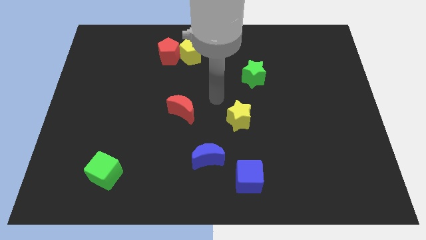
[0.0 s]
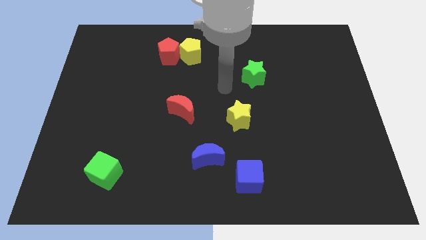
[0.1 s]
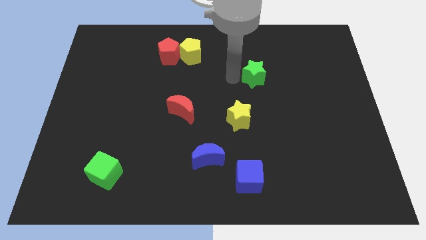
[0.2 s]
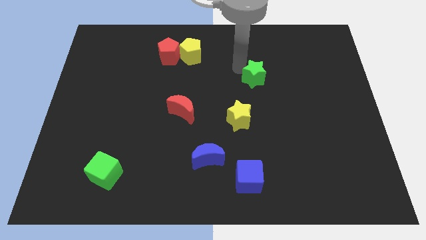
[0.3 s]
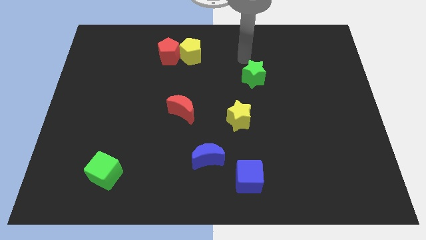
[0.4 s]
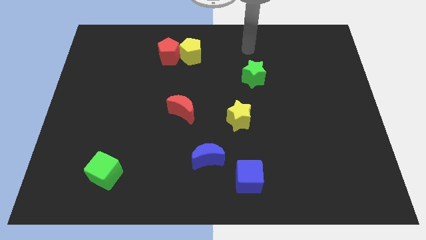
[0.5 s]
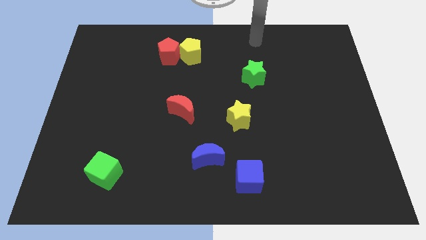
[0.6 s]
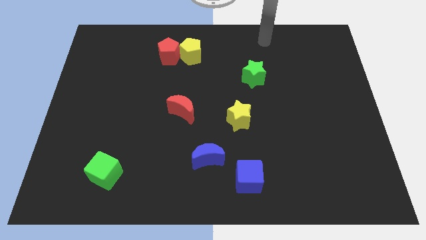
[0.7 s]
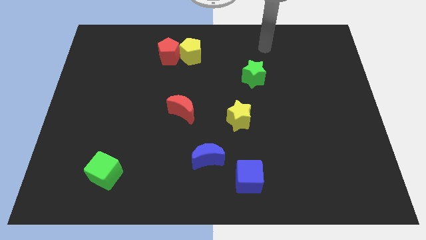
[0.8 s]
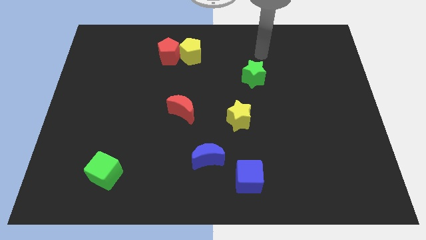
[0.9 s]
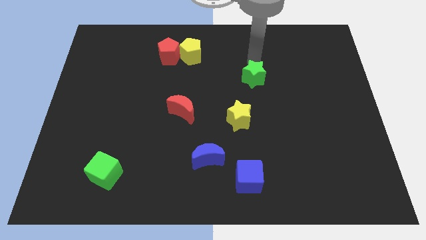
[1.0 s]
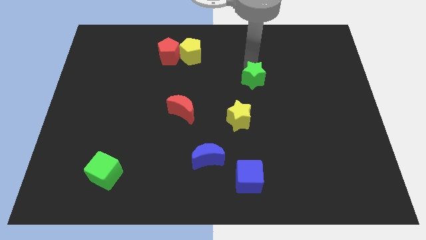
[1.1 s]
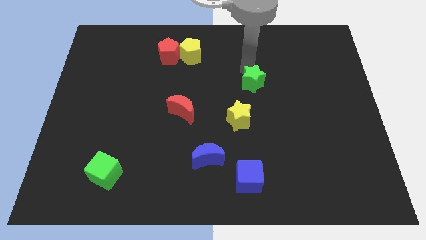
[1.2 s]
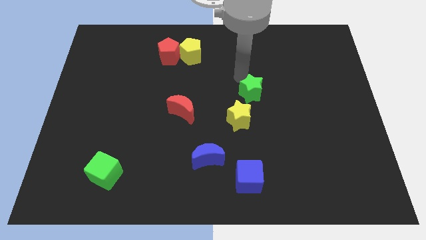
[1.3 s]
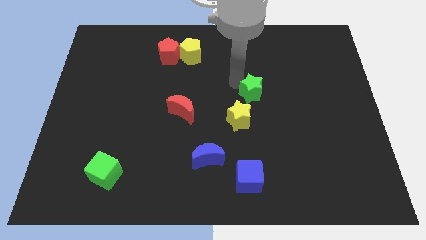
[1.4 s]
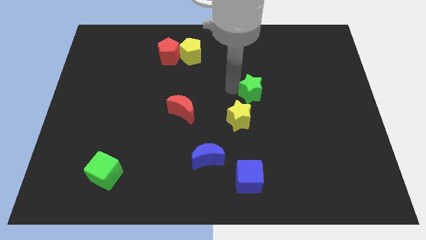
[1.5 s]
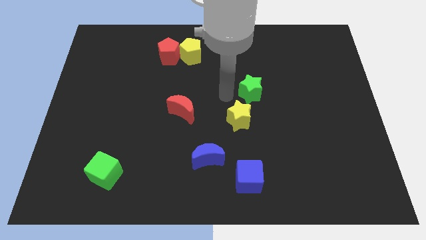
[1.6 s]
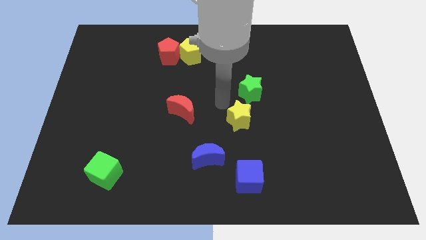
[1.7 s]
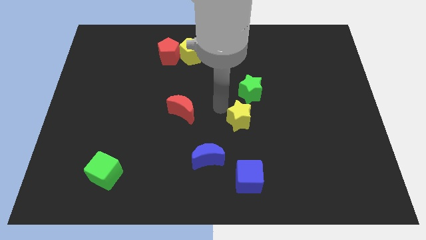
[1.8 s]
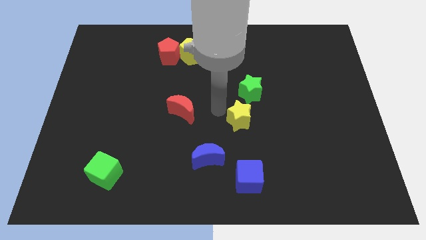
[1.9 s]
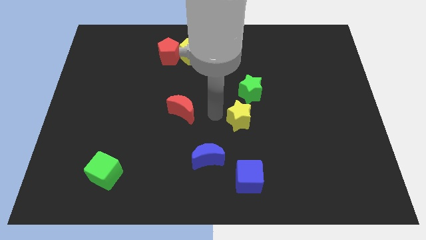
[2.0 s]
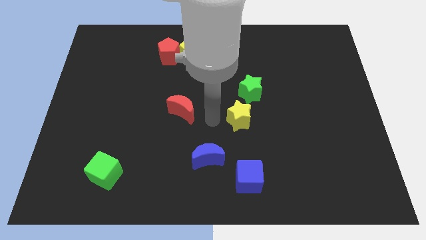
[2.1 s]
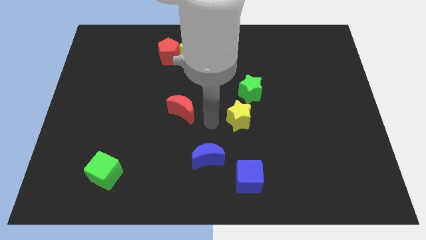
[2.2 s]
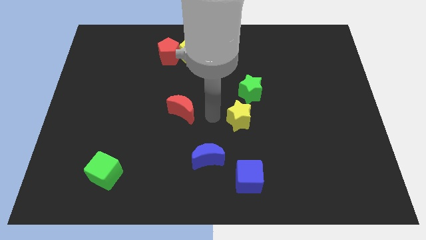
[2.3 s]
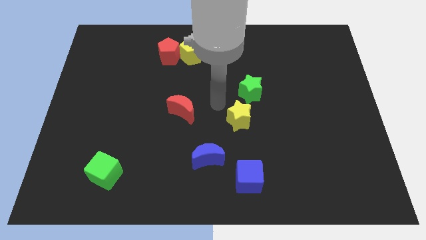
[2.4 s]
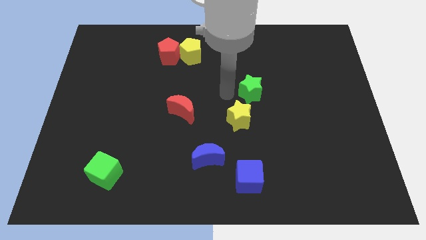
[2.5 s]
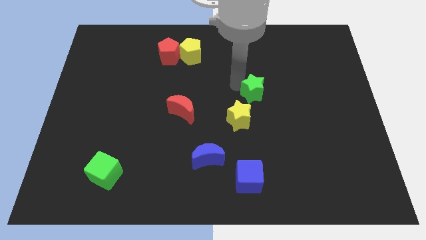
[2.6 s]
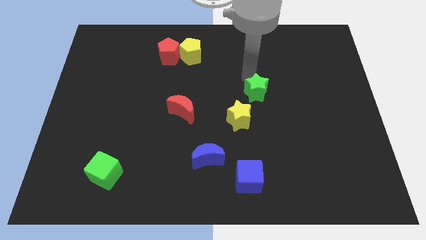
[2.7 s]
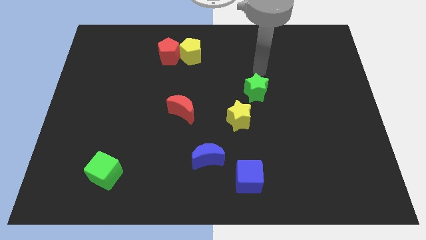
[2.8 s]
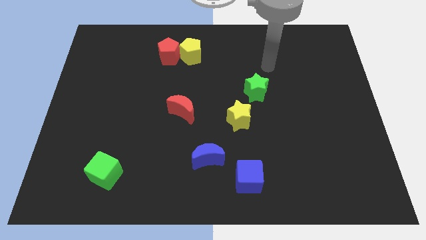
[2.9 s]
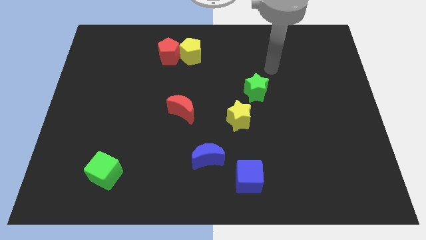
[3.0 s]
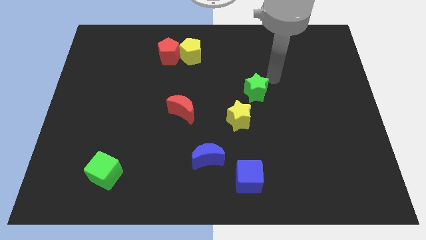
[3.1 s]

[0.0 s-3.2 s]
push the green star towards the yellow star and go away

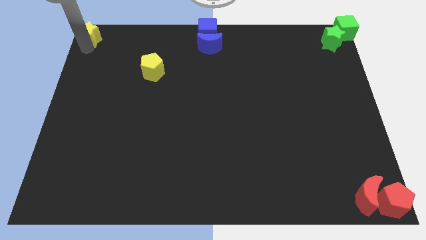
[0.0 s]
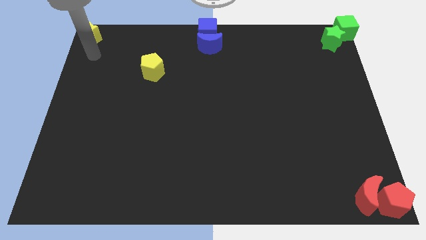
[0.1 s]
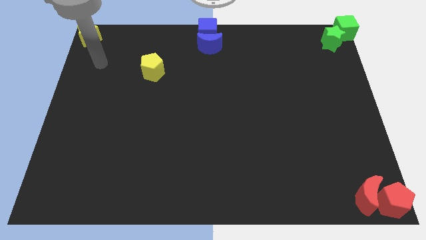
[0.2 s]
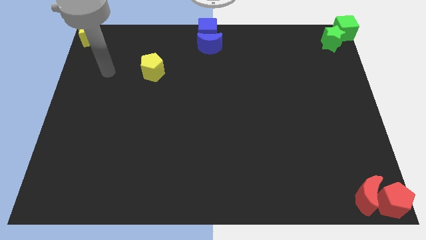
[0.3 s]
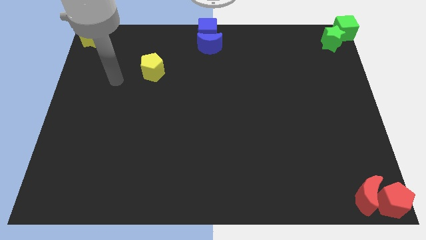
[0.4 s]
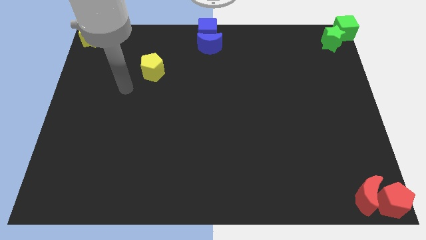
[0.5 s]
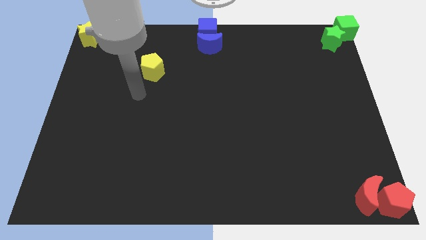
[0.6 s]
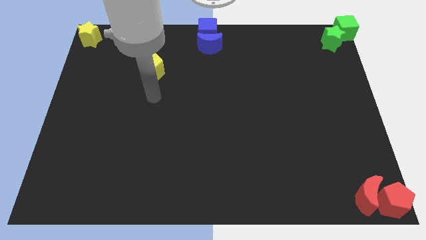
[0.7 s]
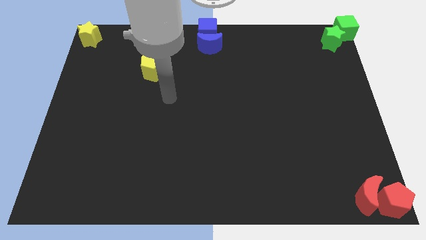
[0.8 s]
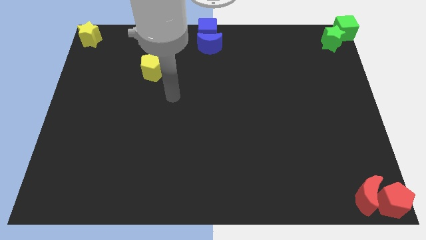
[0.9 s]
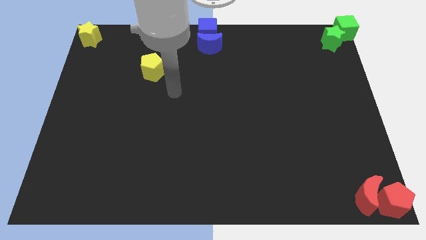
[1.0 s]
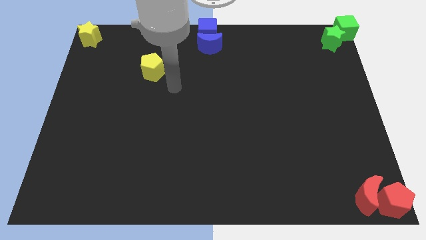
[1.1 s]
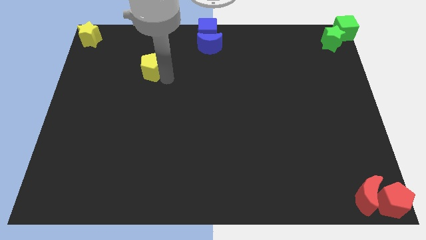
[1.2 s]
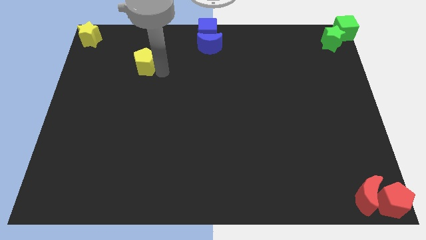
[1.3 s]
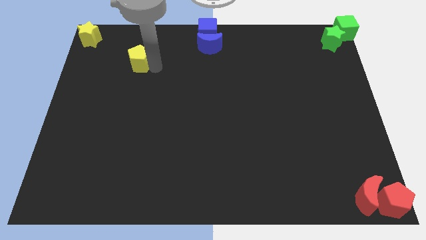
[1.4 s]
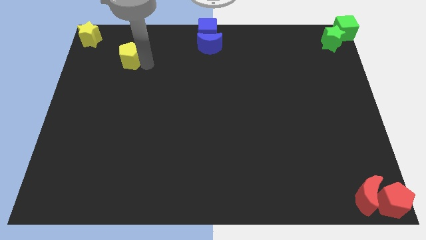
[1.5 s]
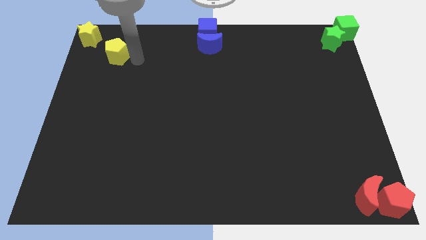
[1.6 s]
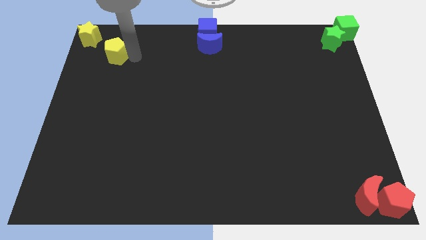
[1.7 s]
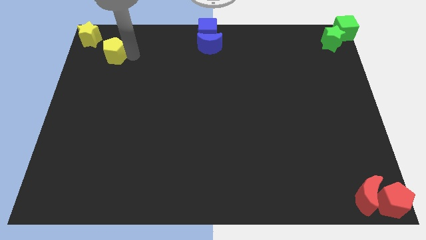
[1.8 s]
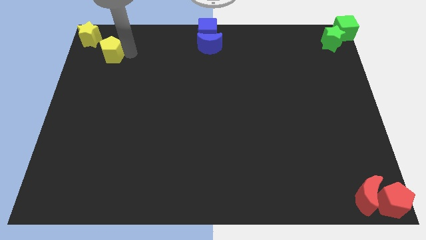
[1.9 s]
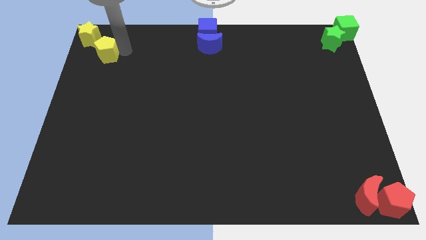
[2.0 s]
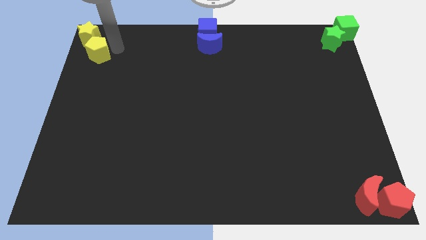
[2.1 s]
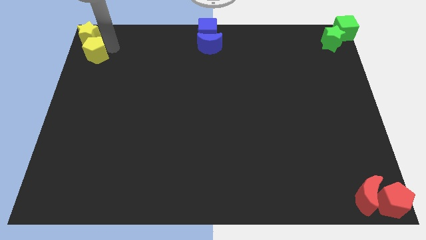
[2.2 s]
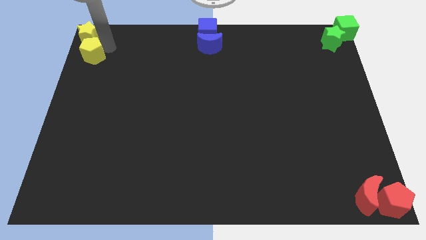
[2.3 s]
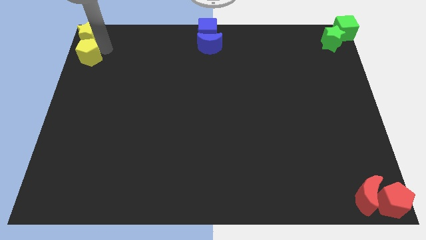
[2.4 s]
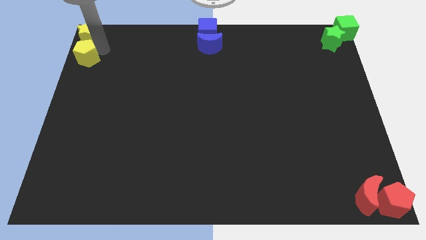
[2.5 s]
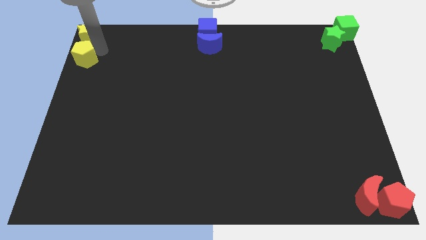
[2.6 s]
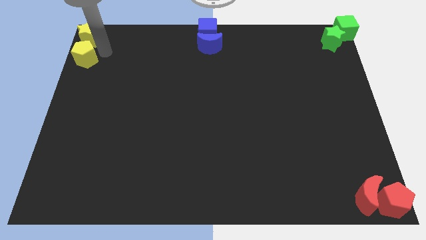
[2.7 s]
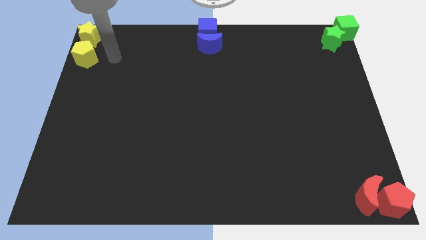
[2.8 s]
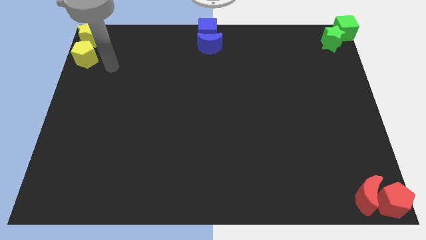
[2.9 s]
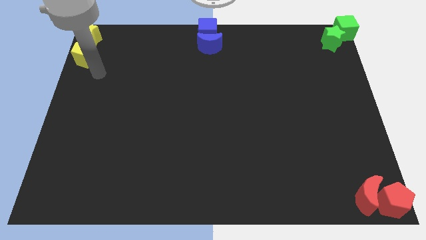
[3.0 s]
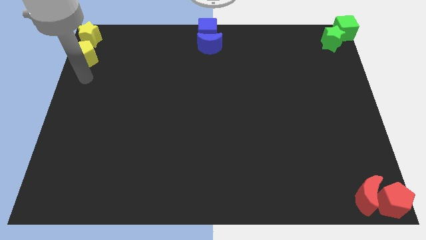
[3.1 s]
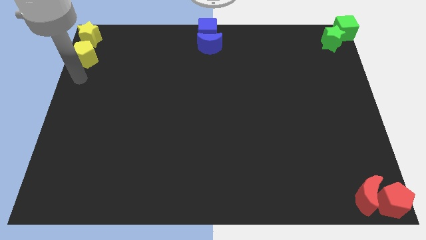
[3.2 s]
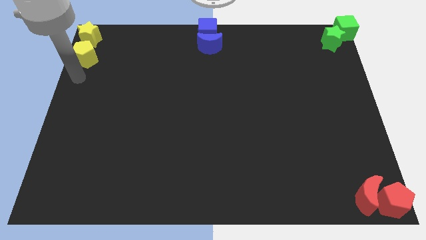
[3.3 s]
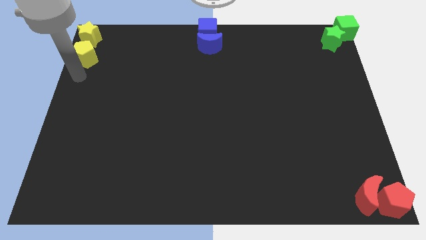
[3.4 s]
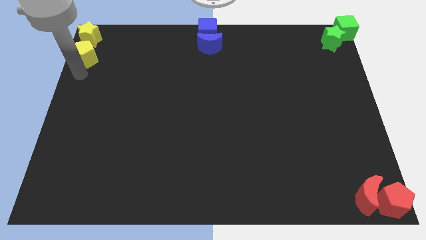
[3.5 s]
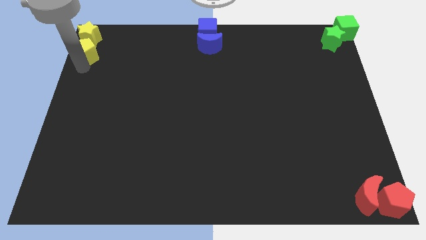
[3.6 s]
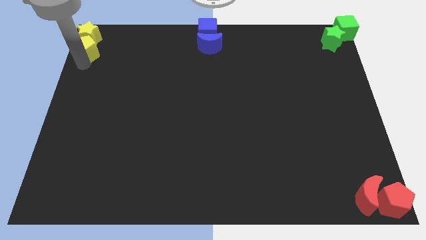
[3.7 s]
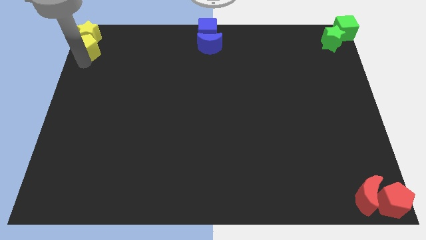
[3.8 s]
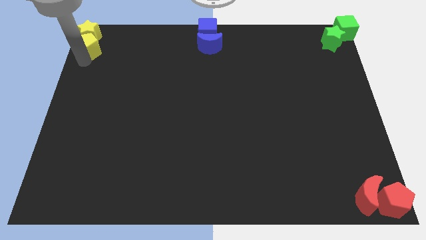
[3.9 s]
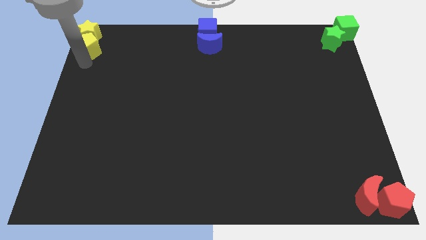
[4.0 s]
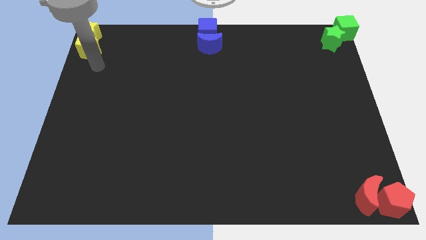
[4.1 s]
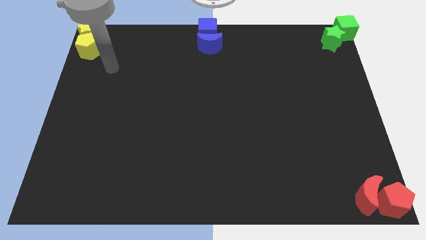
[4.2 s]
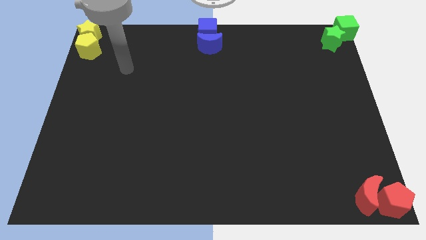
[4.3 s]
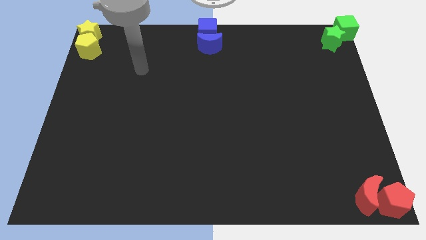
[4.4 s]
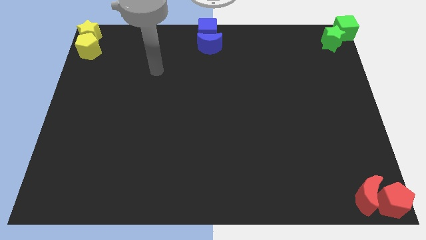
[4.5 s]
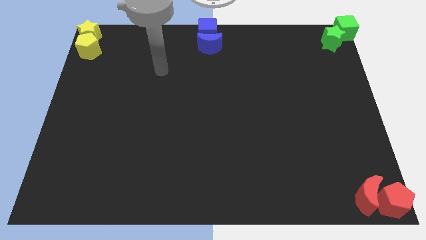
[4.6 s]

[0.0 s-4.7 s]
put the yellow pentagon below the yellow star

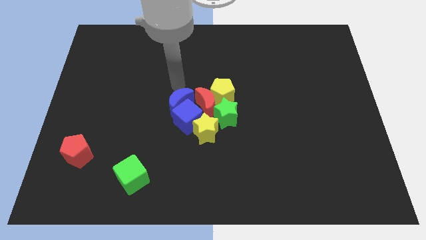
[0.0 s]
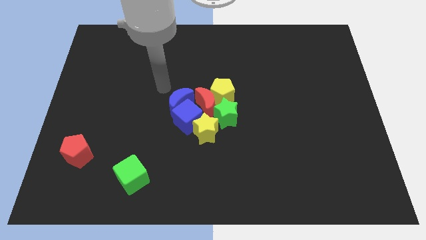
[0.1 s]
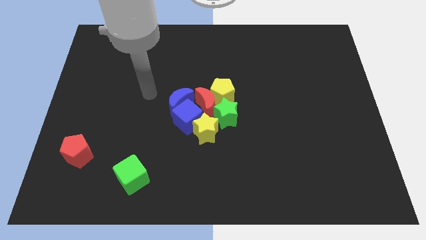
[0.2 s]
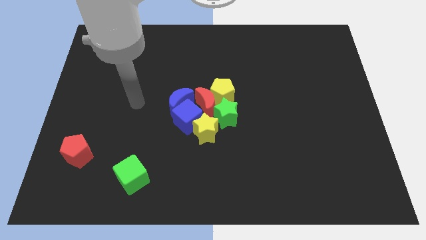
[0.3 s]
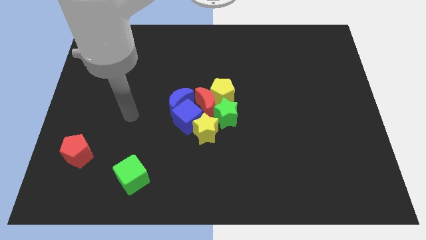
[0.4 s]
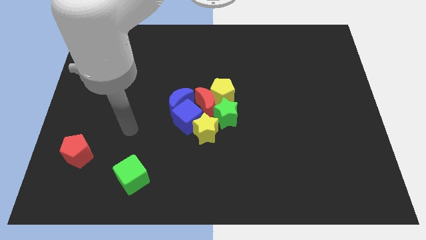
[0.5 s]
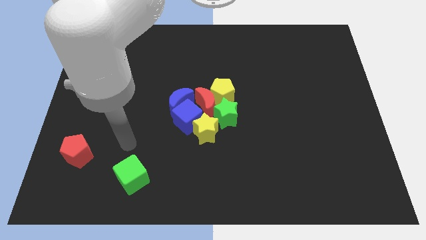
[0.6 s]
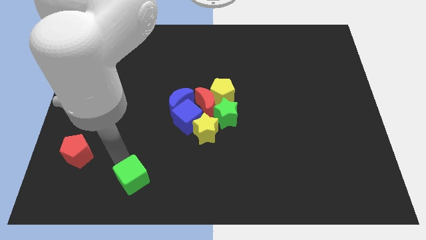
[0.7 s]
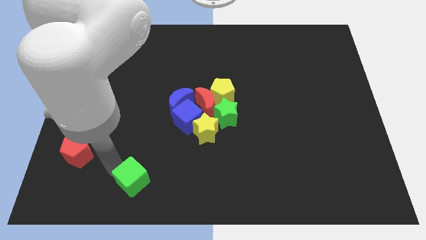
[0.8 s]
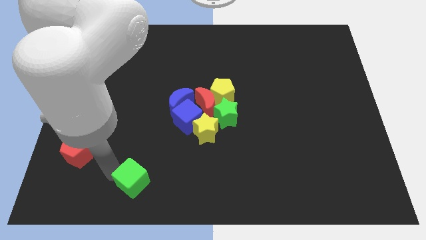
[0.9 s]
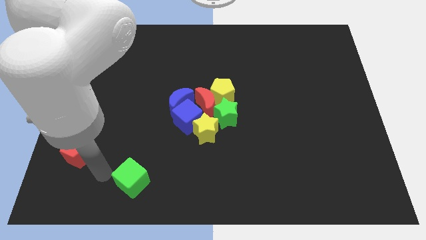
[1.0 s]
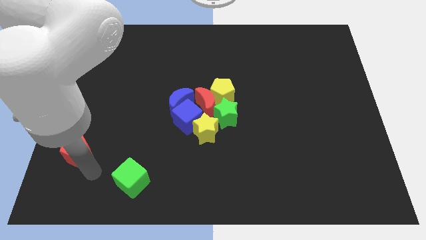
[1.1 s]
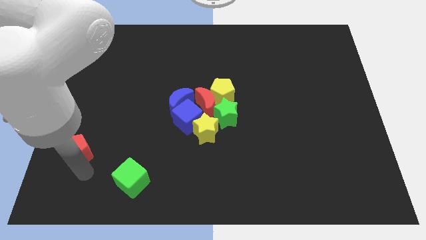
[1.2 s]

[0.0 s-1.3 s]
slightly push the green cube towards the down of the board
